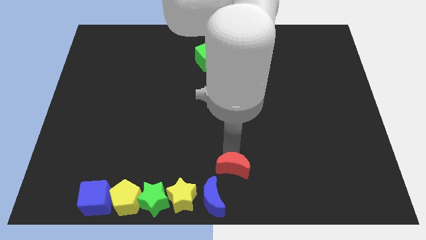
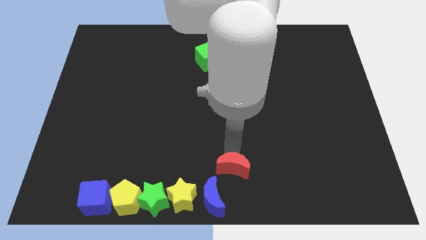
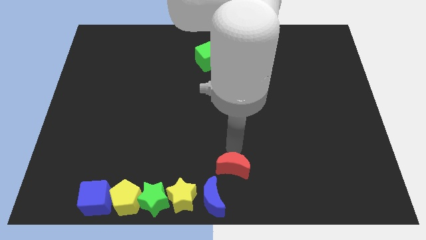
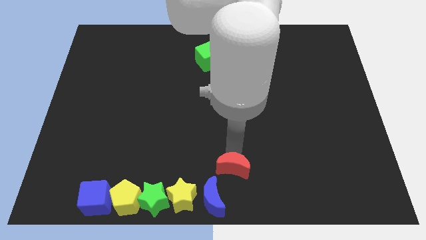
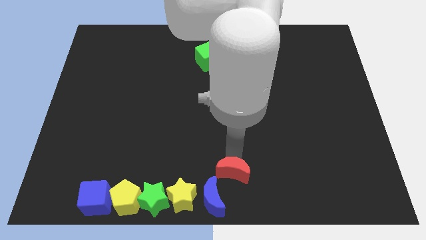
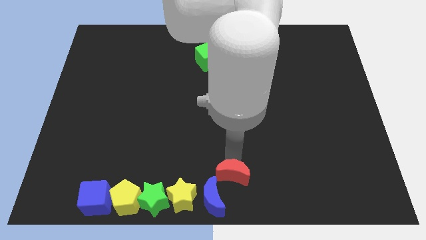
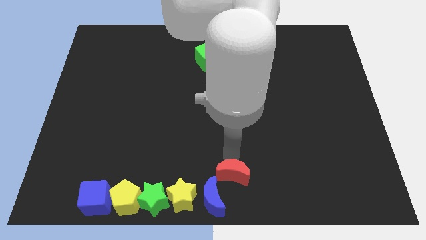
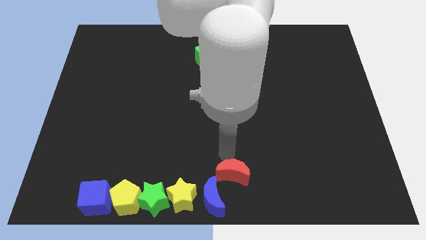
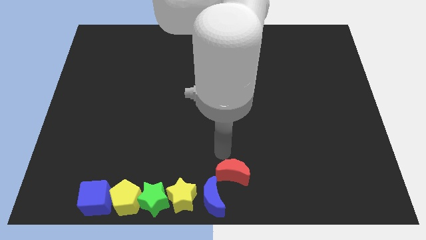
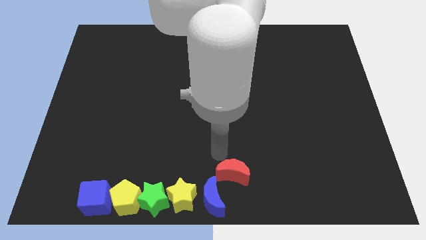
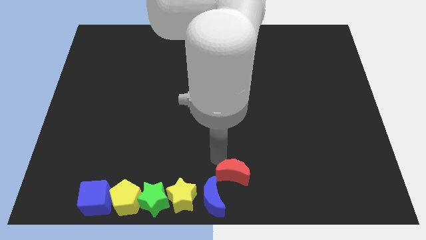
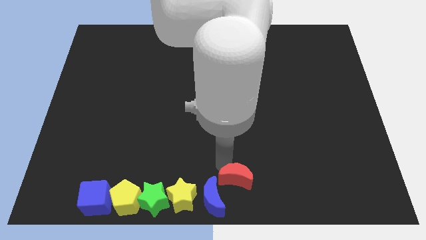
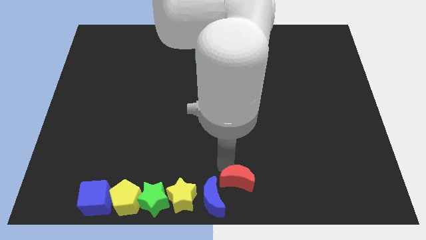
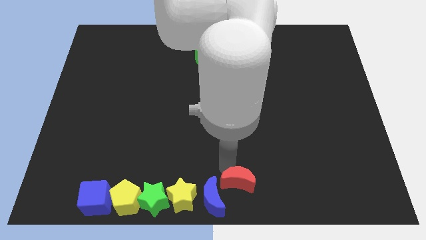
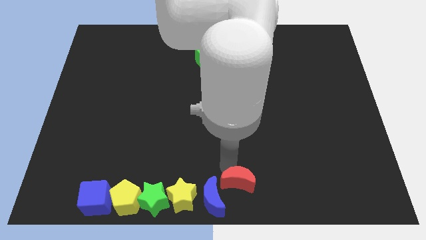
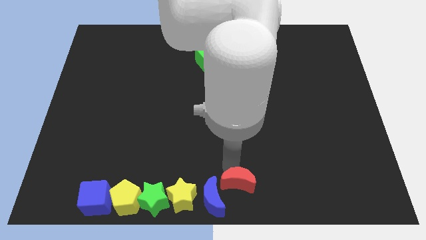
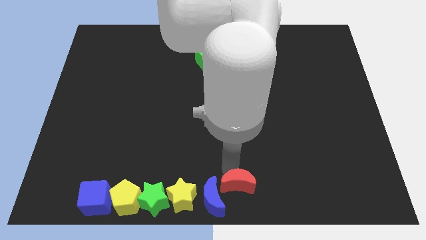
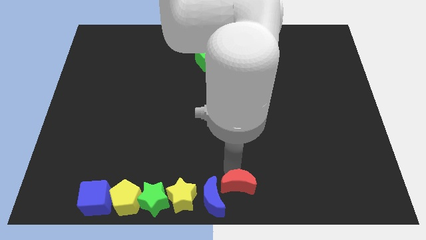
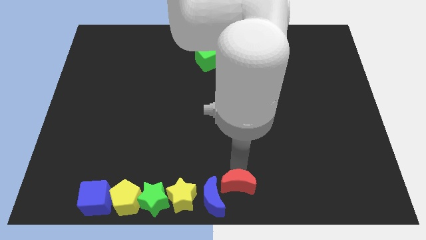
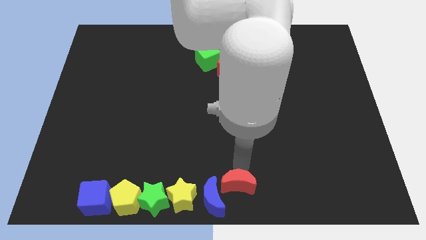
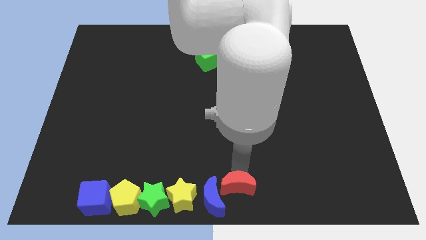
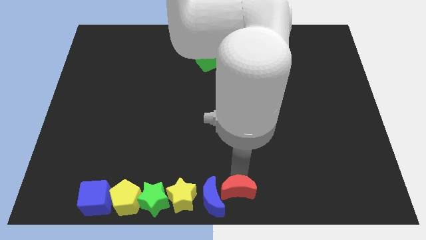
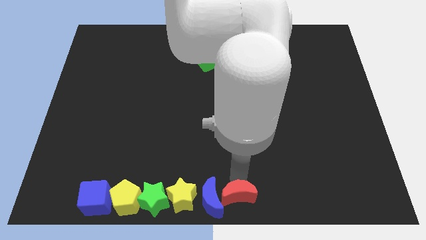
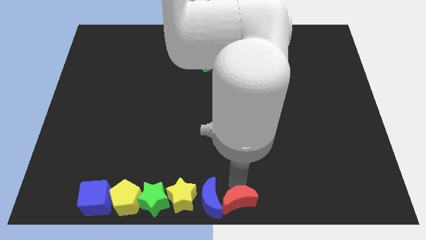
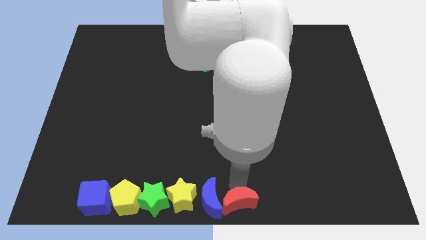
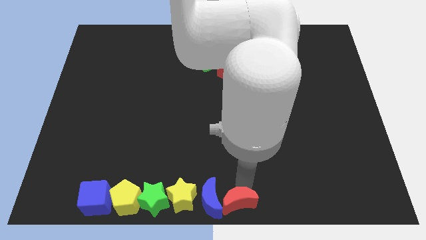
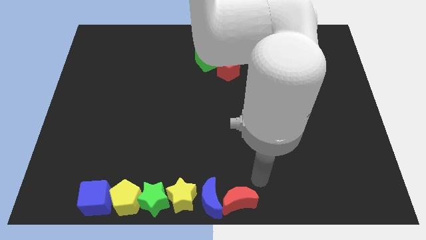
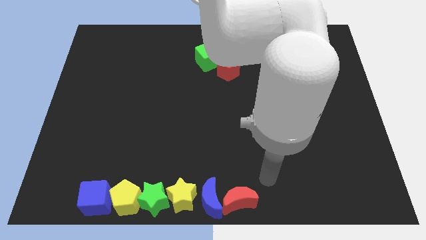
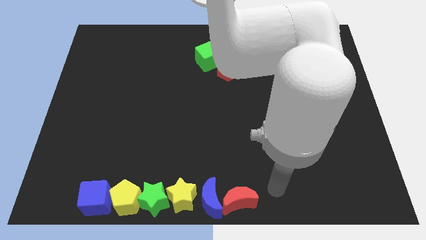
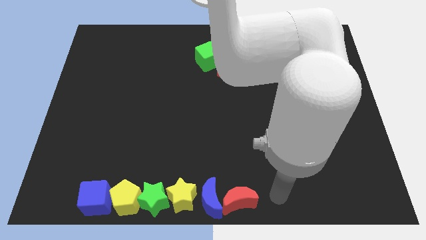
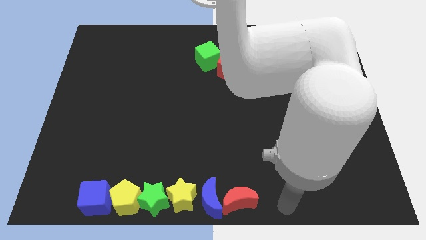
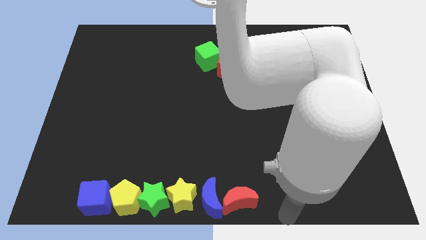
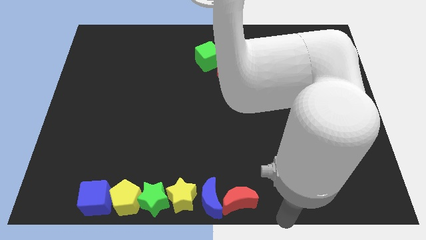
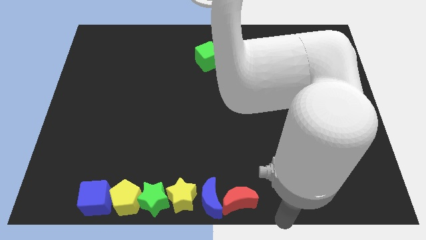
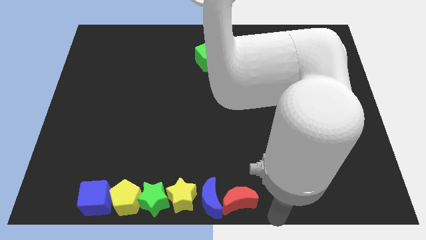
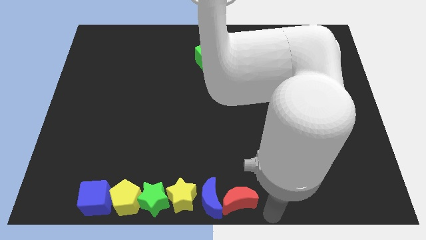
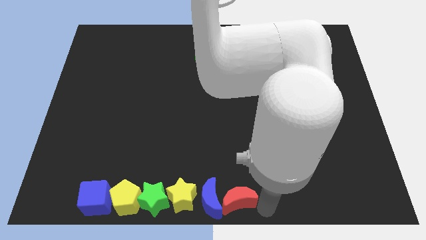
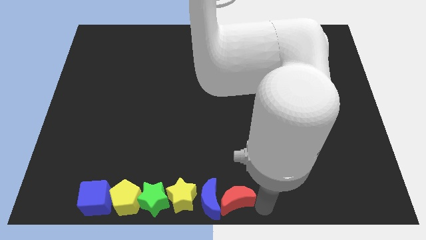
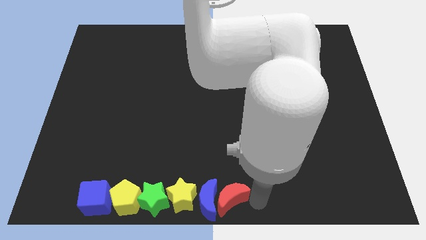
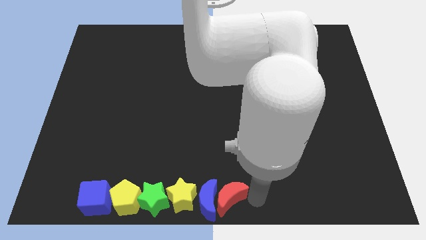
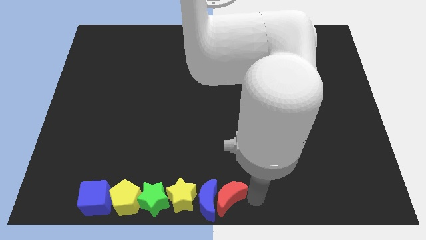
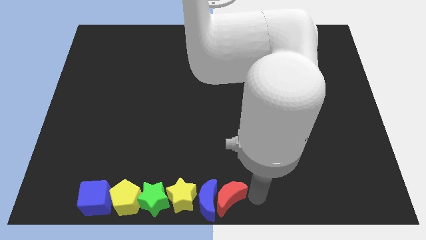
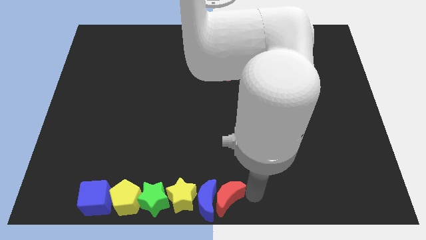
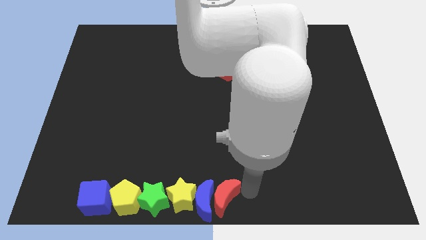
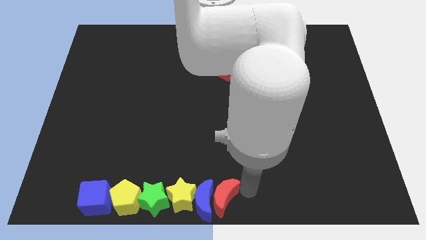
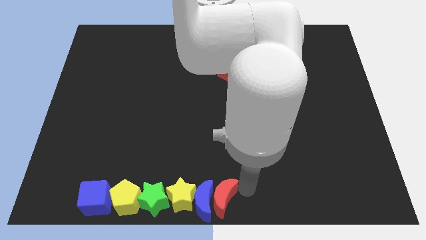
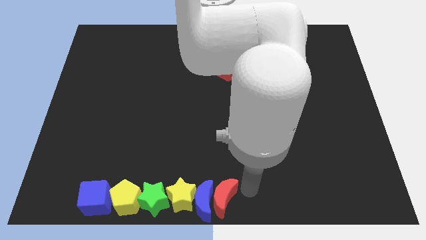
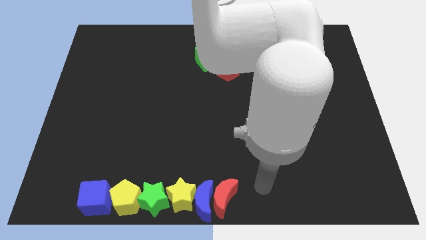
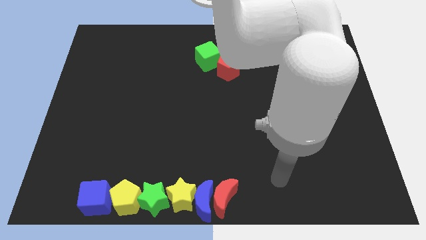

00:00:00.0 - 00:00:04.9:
place red moon to the right of the blue moon

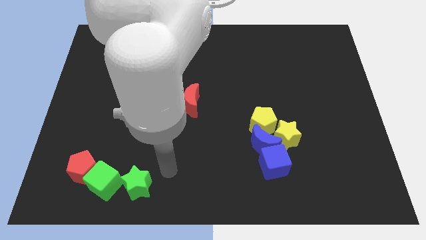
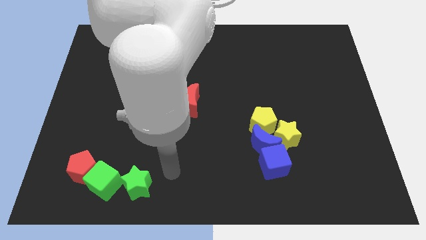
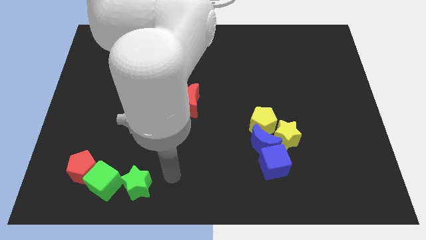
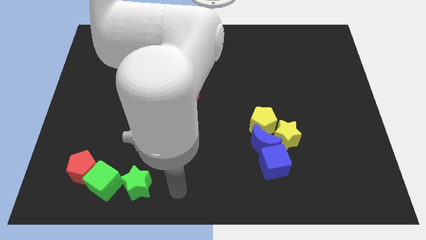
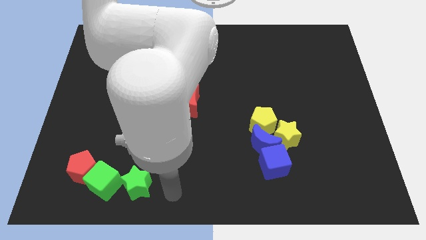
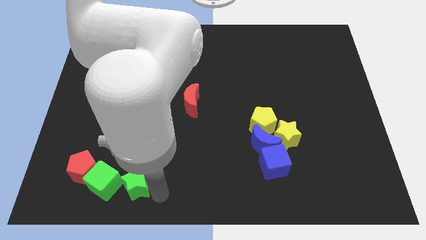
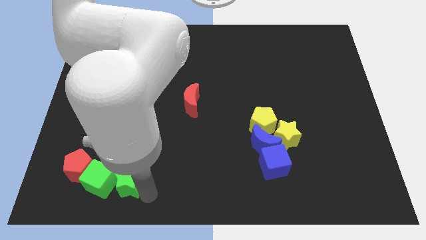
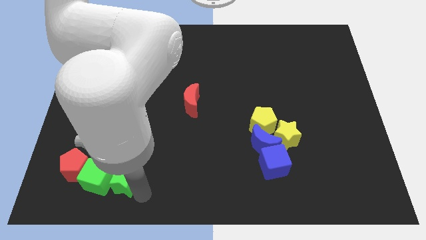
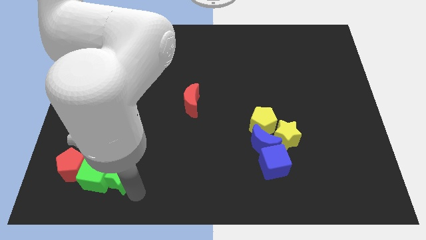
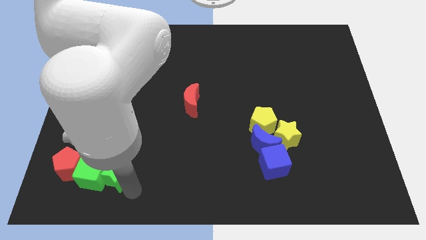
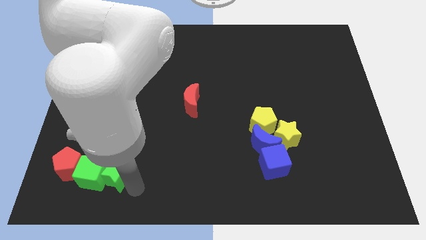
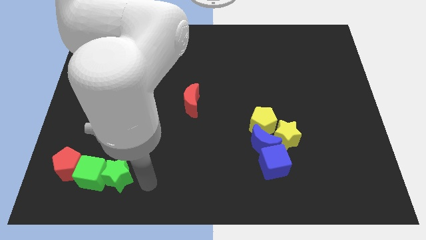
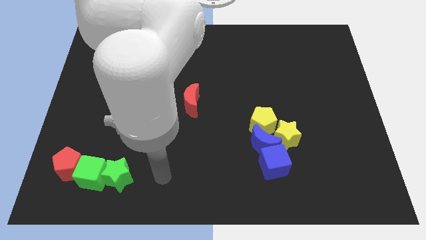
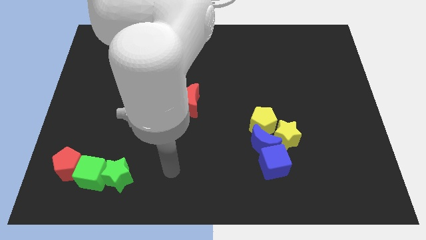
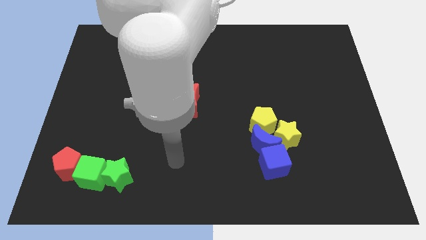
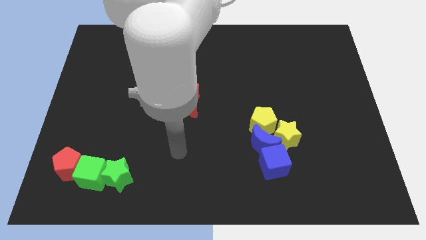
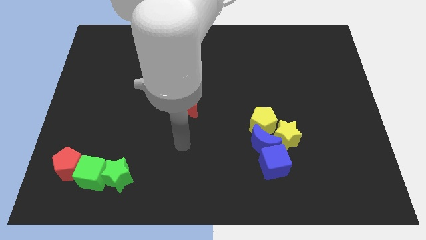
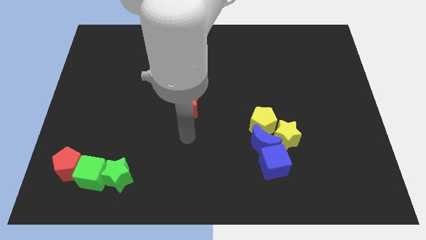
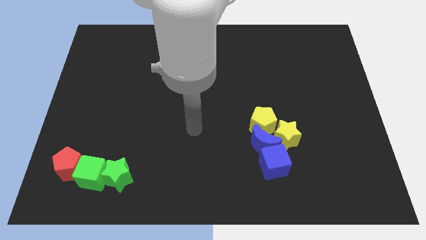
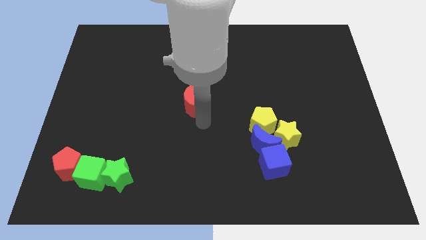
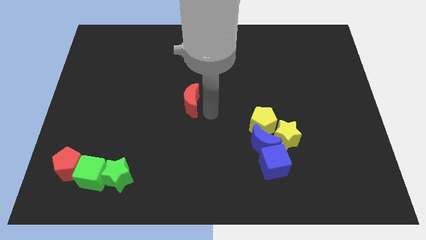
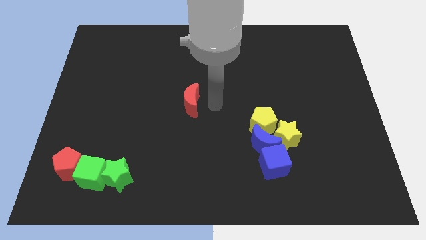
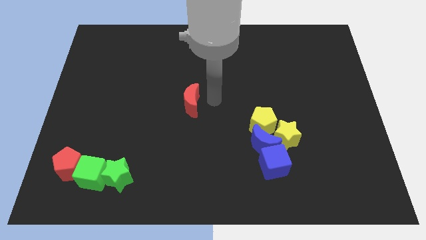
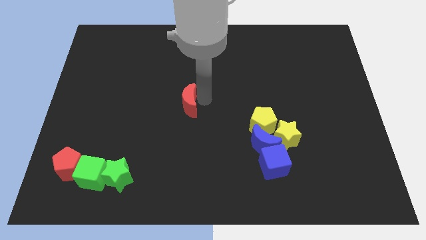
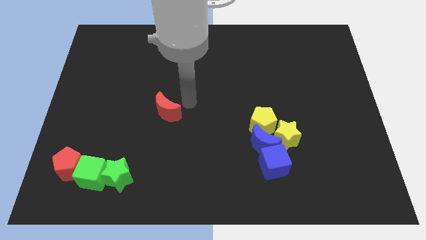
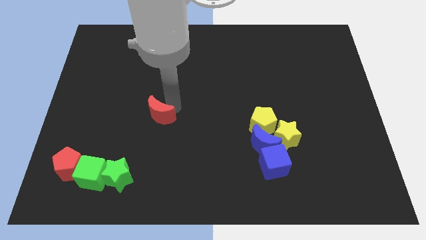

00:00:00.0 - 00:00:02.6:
move the green cube and star and red pentagon slightly left

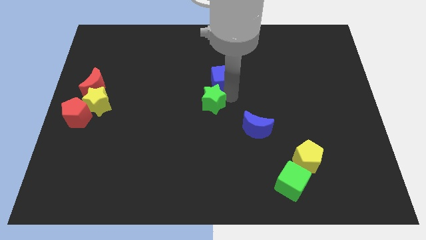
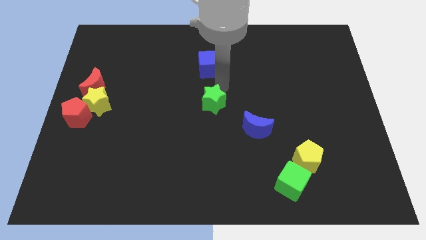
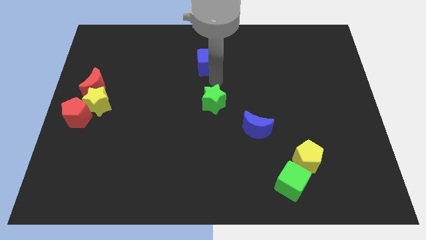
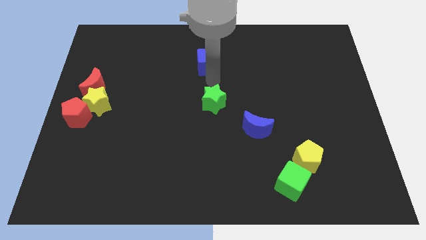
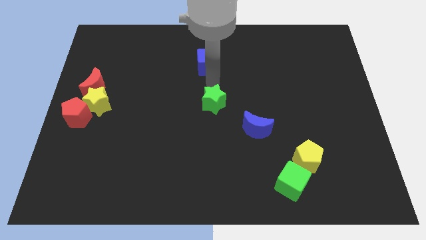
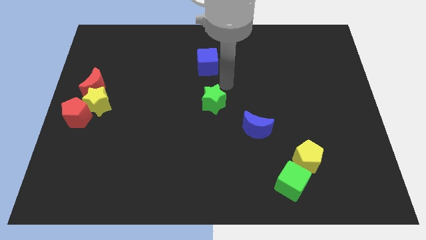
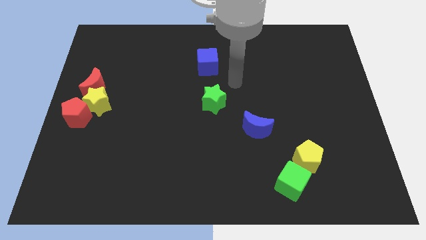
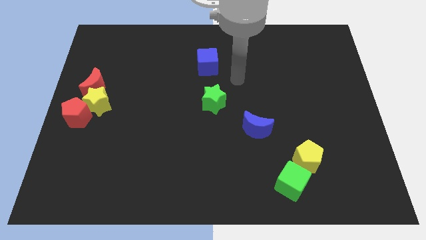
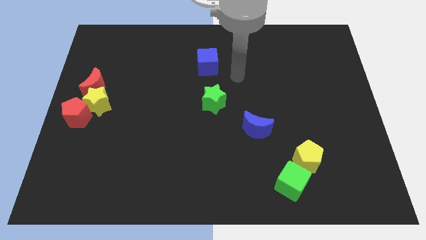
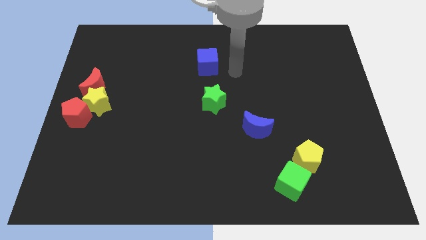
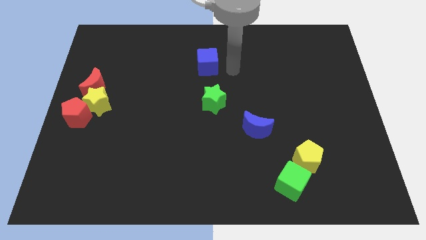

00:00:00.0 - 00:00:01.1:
separate the blue cube from the green star

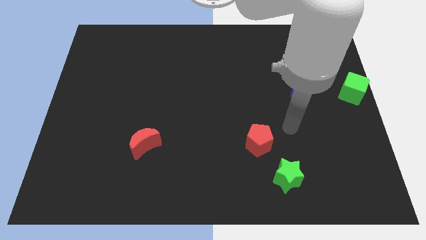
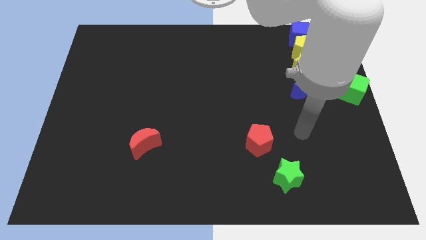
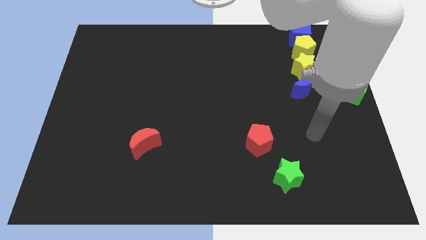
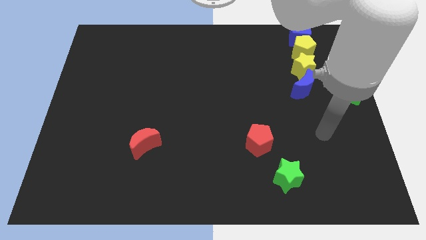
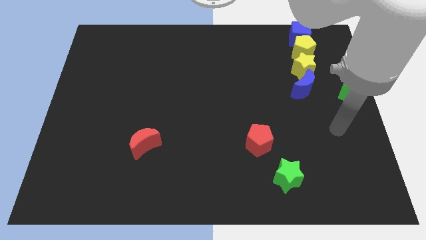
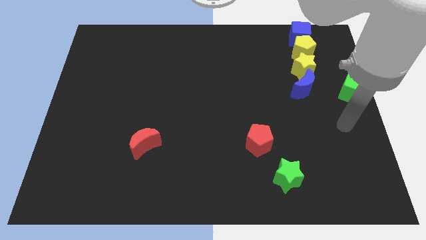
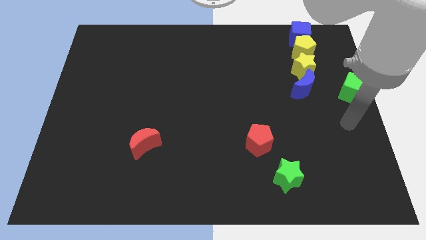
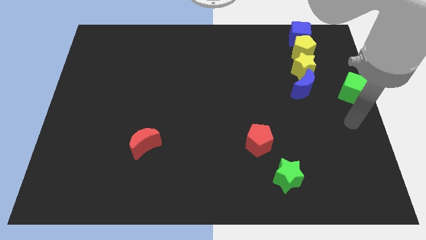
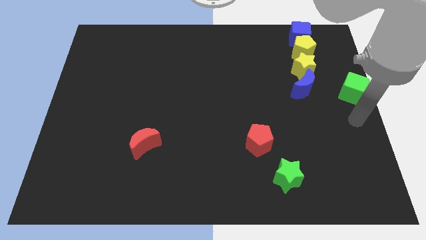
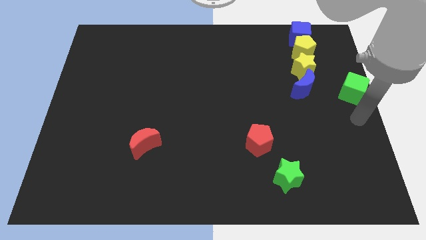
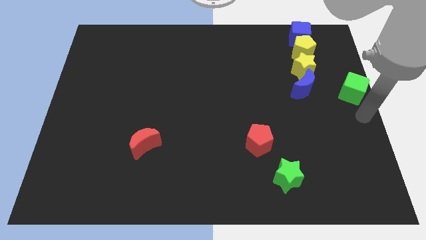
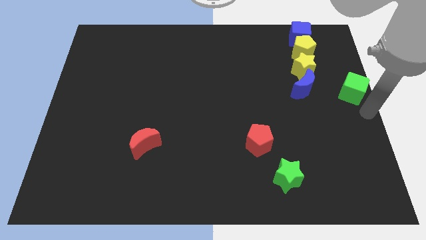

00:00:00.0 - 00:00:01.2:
place your arm at the bottom of the green cube
